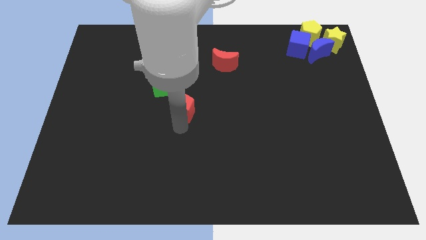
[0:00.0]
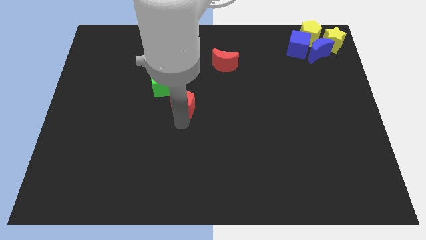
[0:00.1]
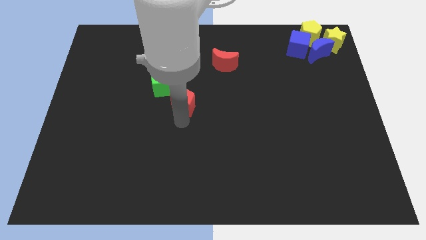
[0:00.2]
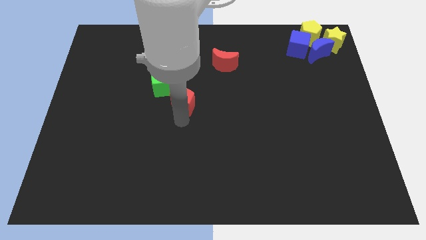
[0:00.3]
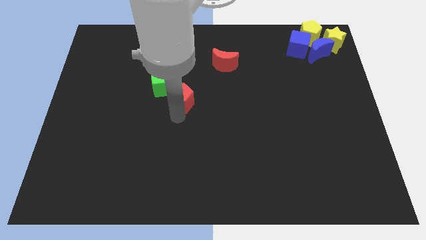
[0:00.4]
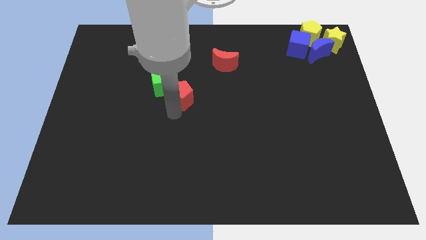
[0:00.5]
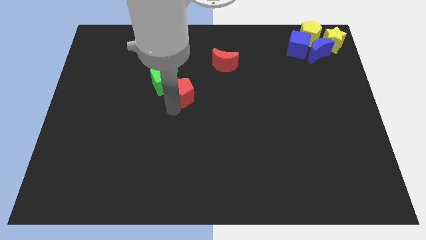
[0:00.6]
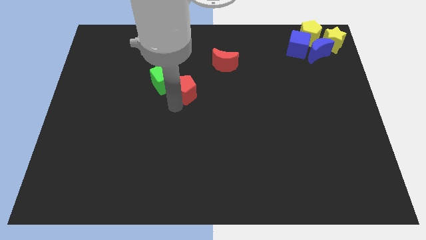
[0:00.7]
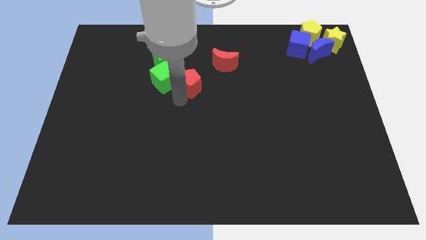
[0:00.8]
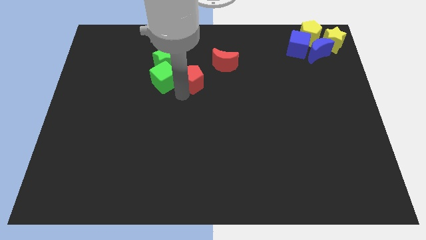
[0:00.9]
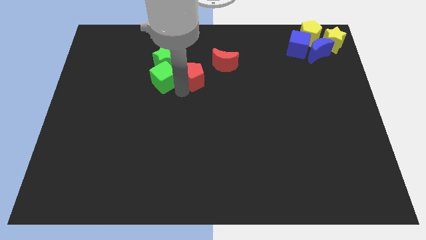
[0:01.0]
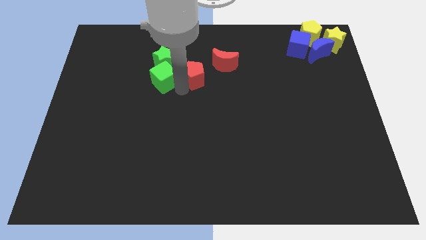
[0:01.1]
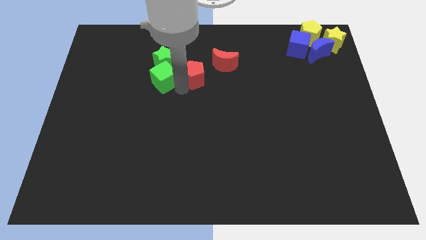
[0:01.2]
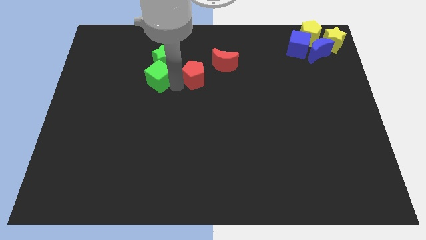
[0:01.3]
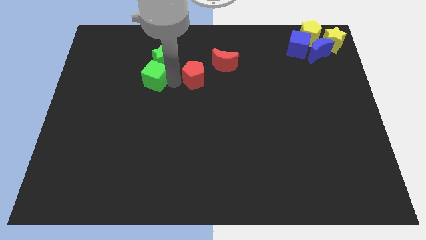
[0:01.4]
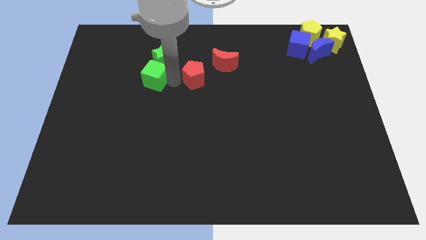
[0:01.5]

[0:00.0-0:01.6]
place your arm in between the green cube and red pentagon

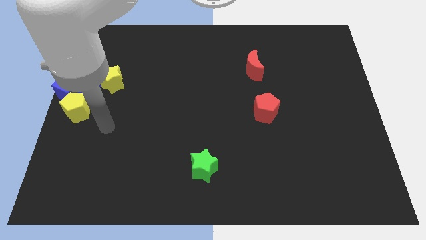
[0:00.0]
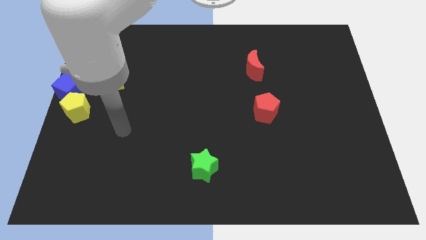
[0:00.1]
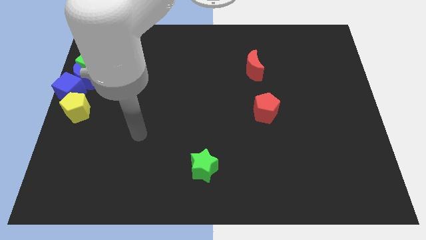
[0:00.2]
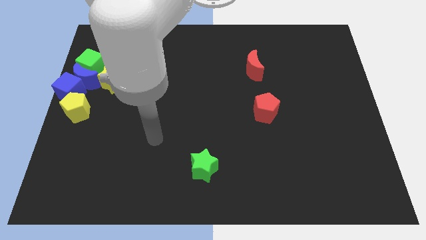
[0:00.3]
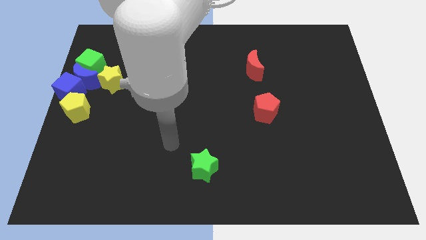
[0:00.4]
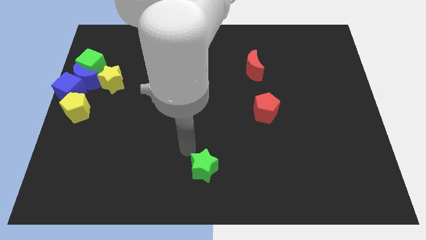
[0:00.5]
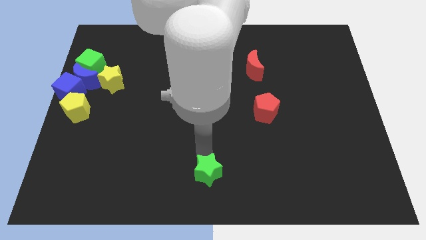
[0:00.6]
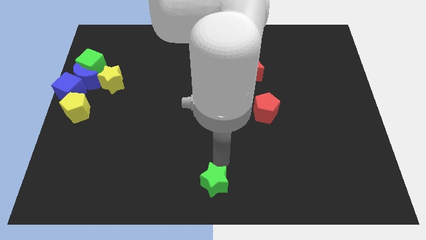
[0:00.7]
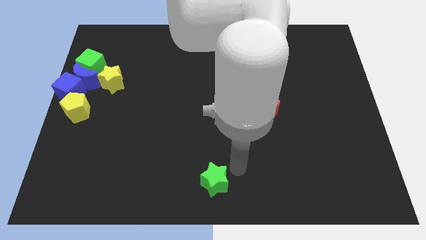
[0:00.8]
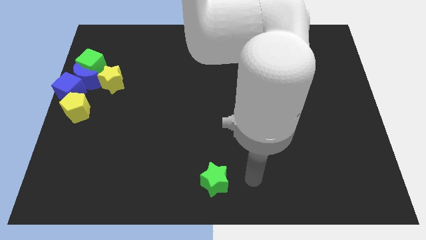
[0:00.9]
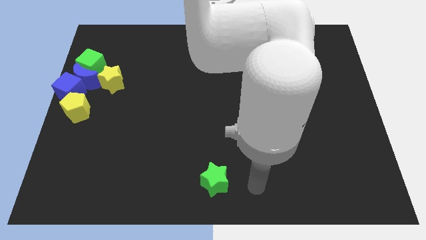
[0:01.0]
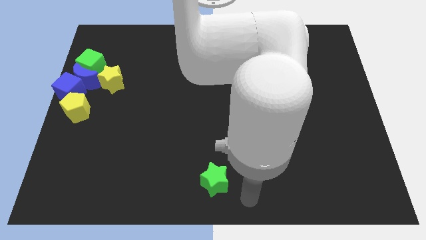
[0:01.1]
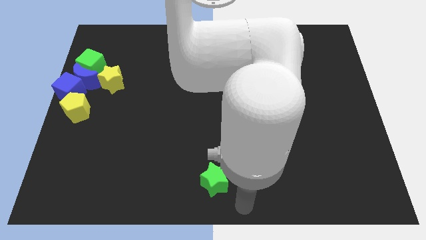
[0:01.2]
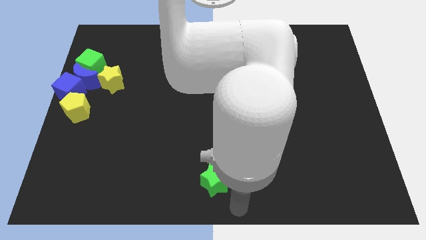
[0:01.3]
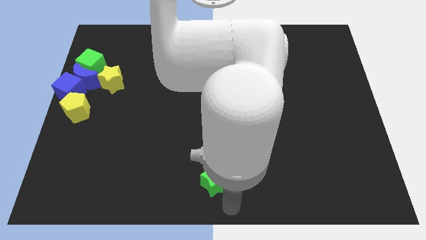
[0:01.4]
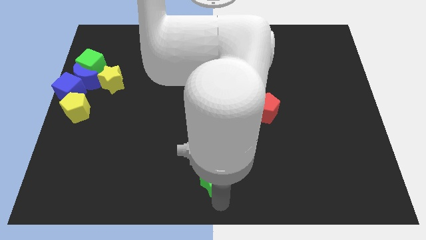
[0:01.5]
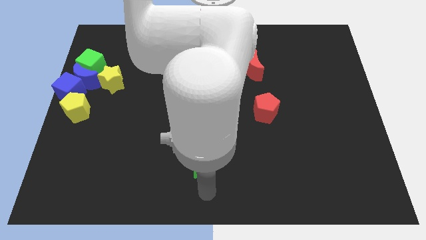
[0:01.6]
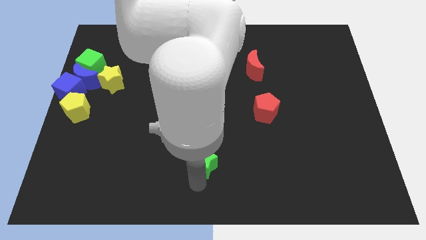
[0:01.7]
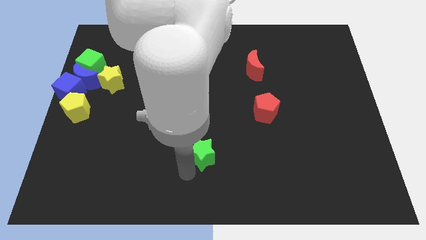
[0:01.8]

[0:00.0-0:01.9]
place the green star diagonally right to the red pentagon

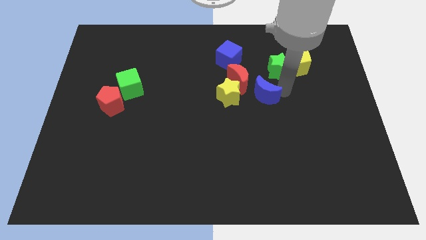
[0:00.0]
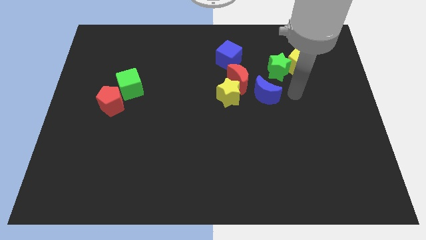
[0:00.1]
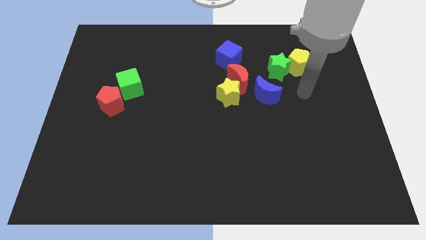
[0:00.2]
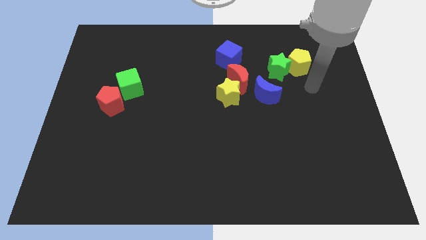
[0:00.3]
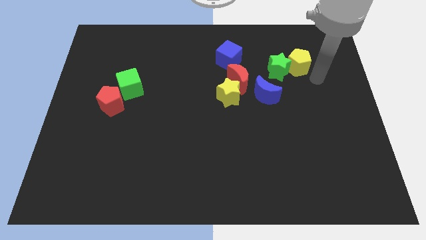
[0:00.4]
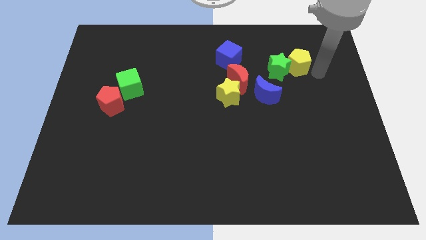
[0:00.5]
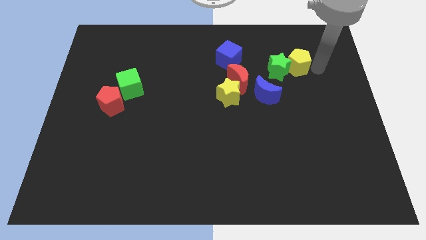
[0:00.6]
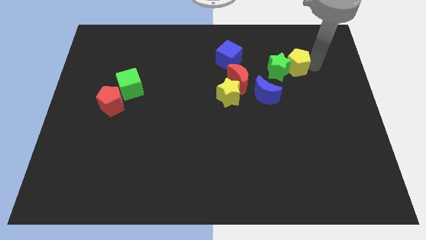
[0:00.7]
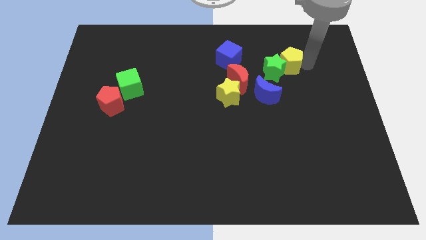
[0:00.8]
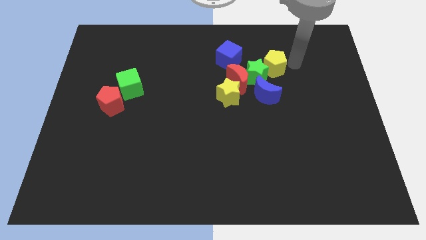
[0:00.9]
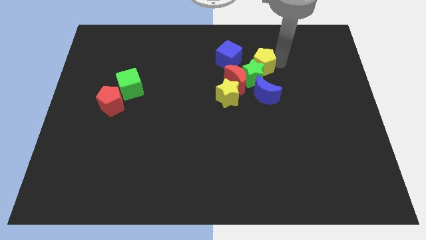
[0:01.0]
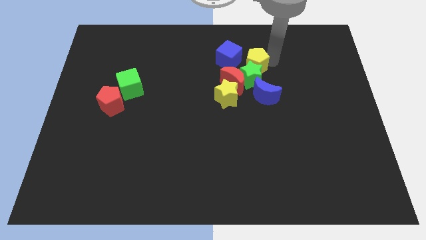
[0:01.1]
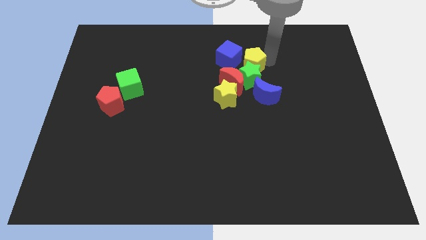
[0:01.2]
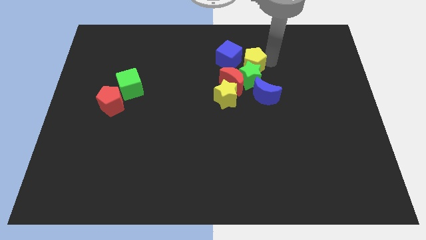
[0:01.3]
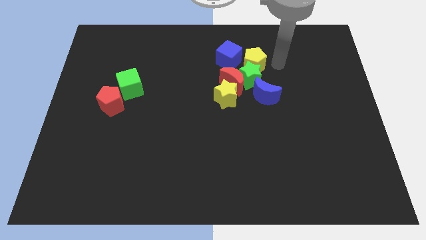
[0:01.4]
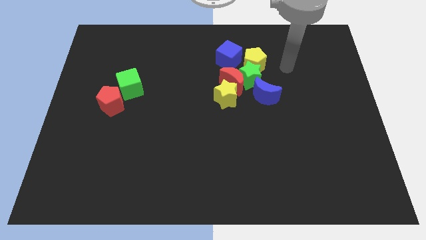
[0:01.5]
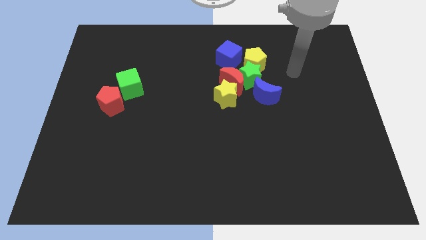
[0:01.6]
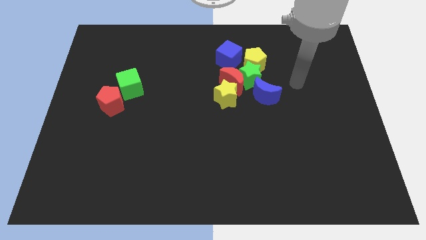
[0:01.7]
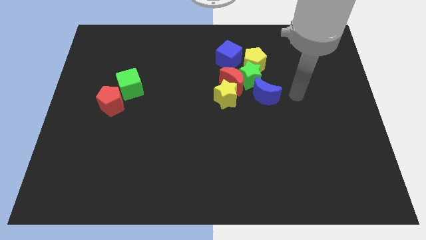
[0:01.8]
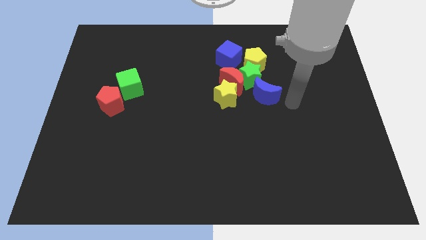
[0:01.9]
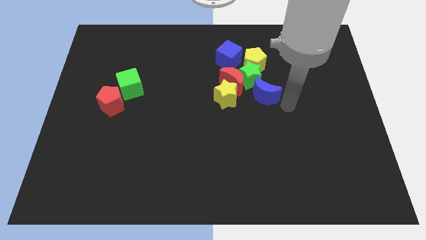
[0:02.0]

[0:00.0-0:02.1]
push the green star along with the yellow pentagon into the red moon

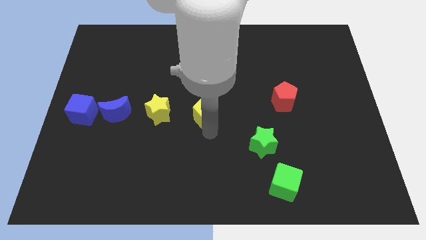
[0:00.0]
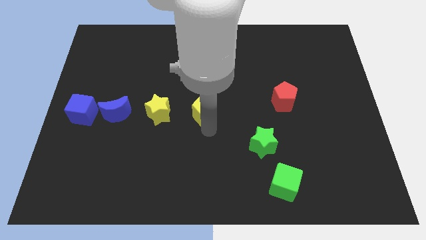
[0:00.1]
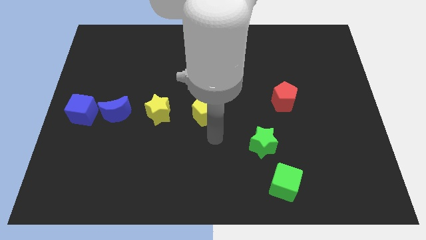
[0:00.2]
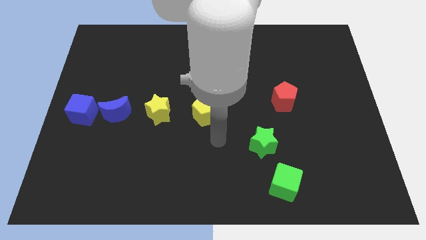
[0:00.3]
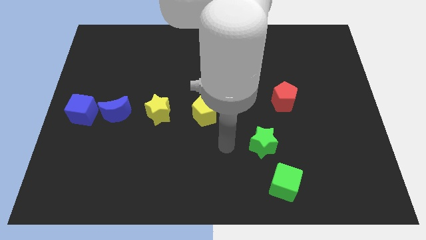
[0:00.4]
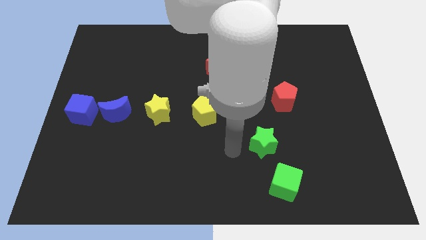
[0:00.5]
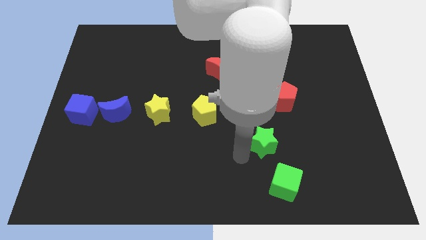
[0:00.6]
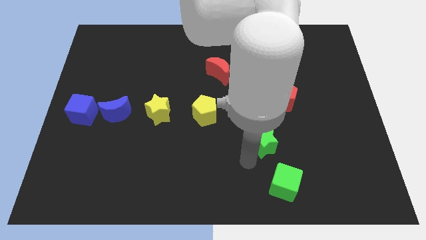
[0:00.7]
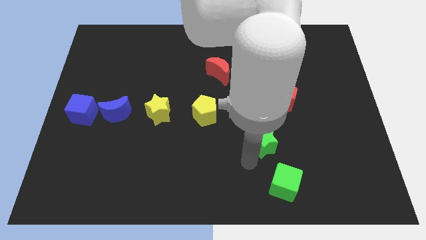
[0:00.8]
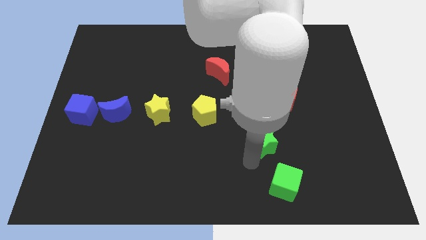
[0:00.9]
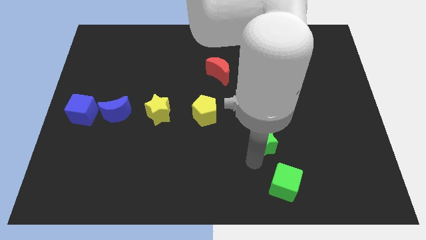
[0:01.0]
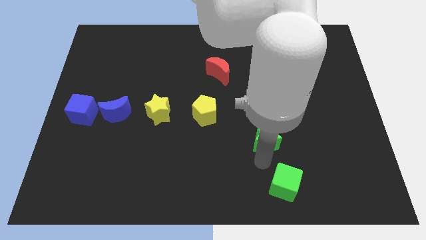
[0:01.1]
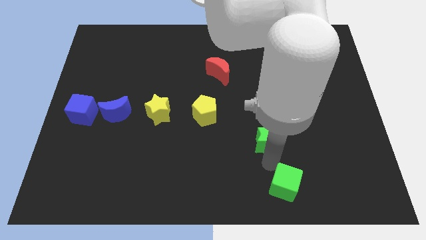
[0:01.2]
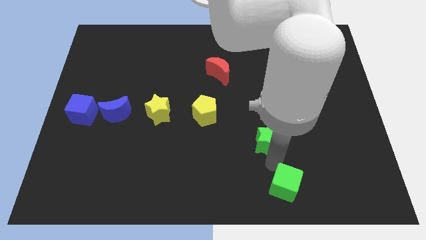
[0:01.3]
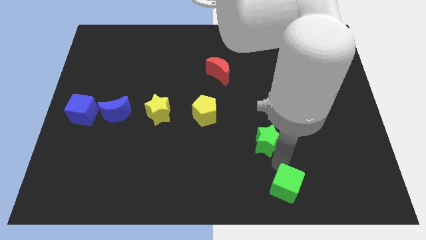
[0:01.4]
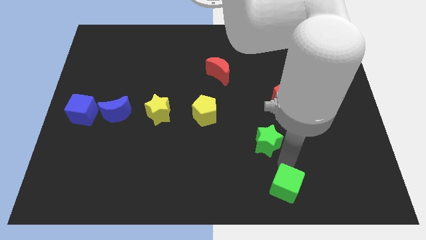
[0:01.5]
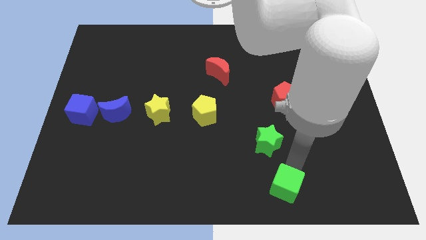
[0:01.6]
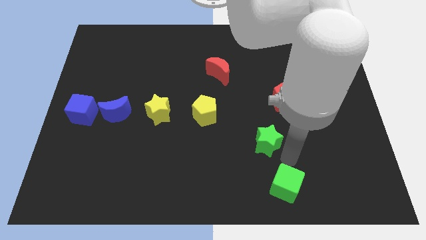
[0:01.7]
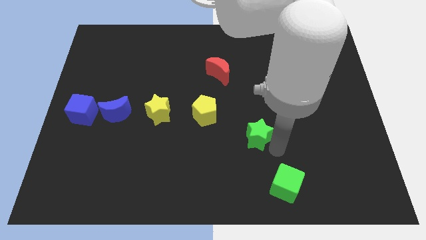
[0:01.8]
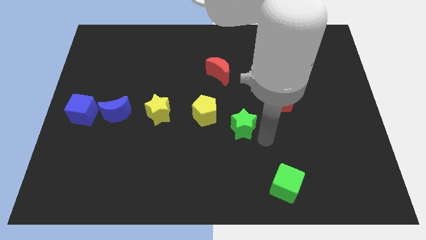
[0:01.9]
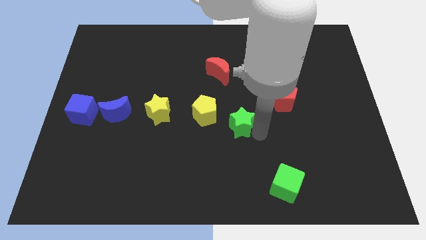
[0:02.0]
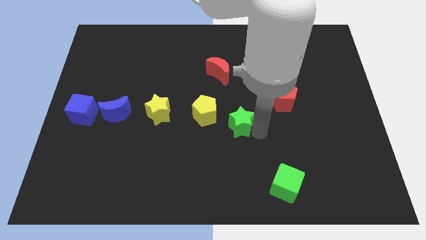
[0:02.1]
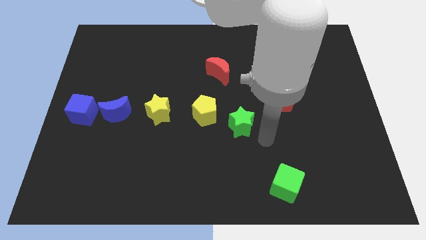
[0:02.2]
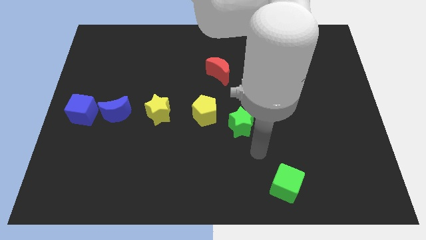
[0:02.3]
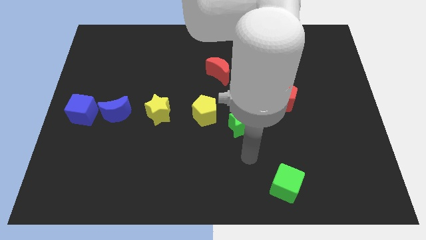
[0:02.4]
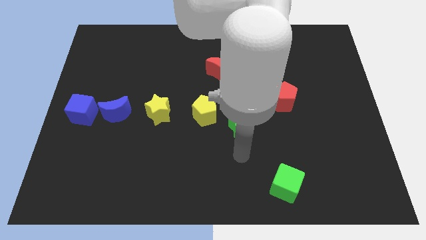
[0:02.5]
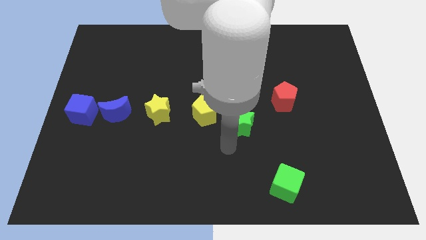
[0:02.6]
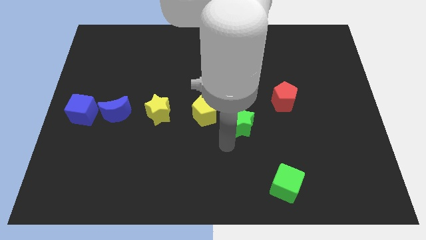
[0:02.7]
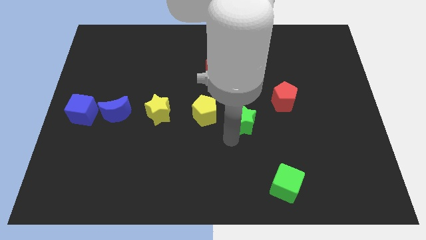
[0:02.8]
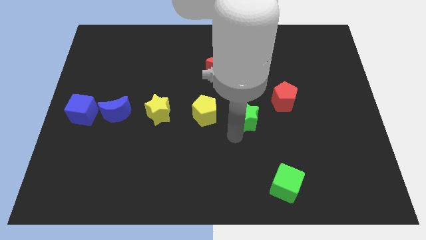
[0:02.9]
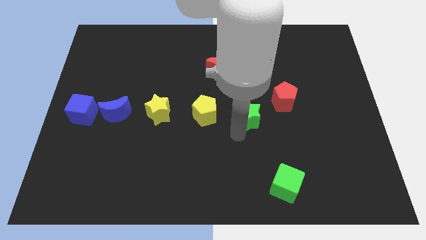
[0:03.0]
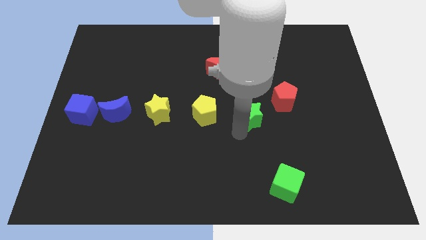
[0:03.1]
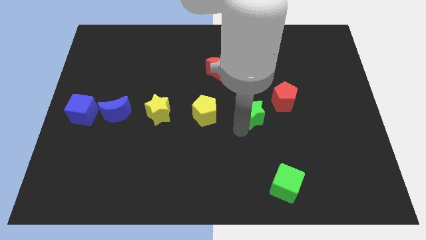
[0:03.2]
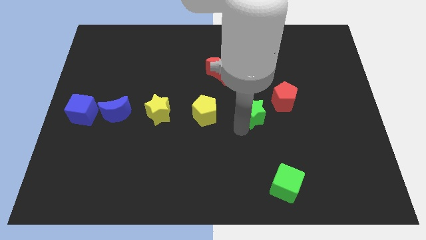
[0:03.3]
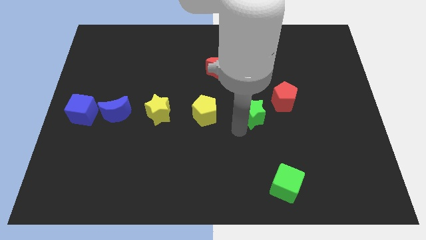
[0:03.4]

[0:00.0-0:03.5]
move the green star to the right side of the horizontal line of blocks
